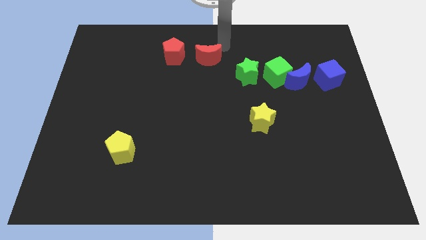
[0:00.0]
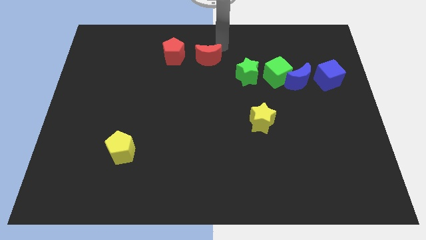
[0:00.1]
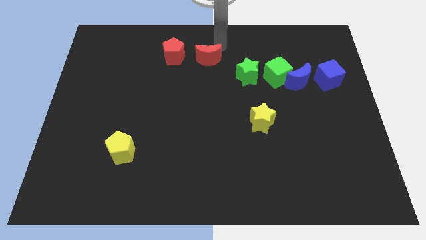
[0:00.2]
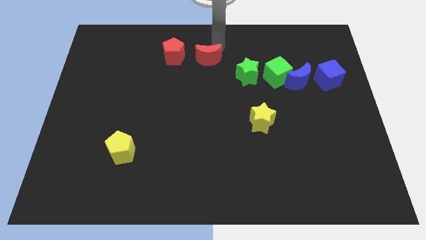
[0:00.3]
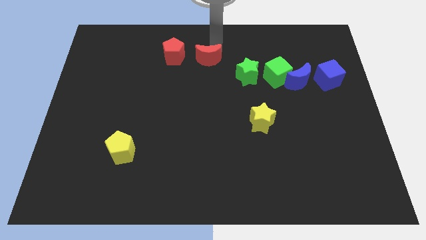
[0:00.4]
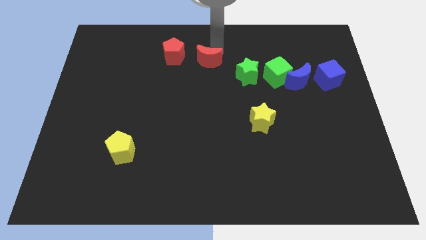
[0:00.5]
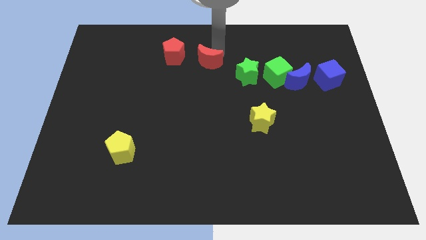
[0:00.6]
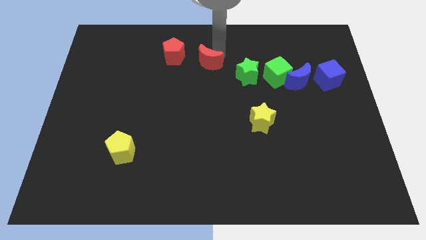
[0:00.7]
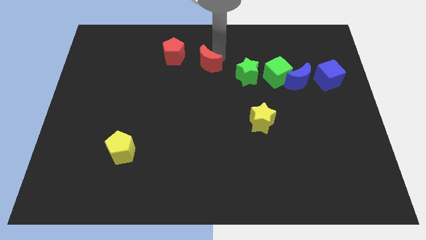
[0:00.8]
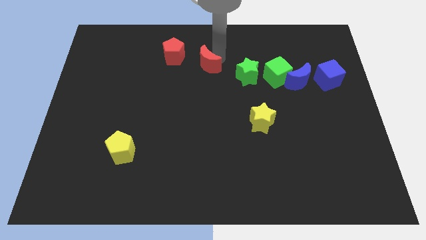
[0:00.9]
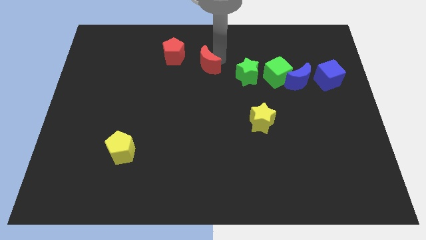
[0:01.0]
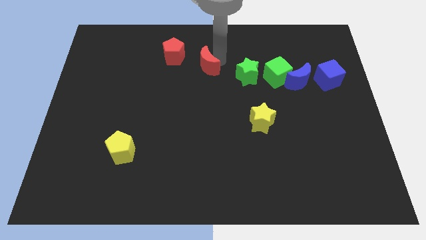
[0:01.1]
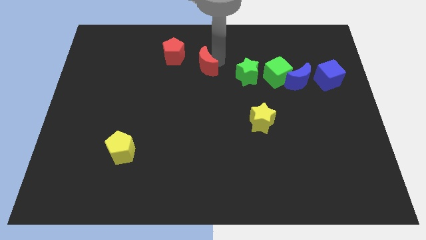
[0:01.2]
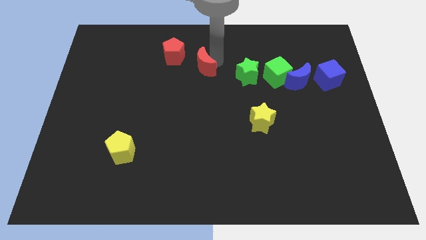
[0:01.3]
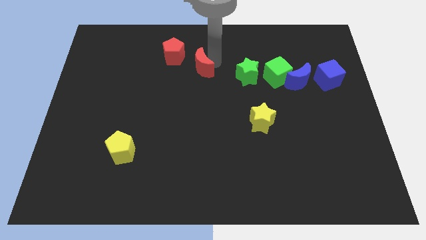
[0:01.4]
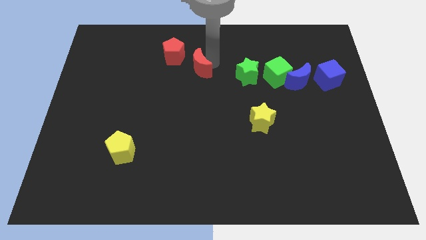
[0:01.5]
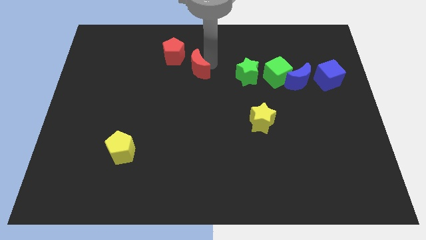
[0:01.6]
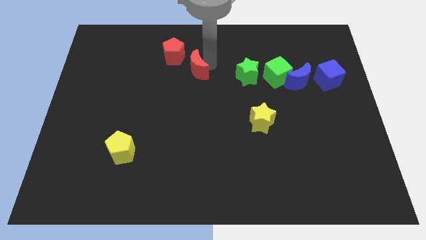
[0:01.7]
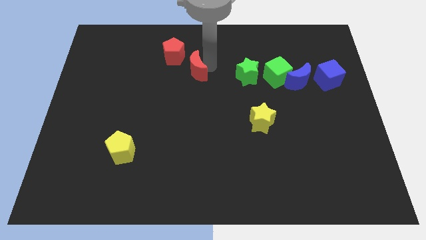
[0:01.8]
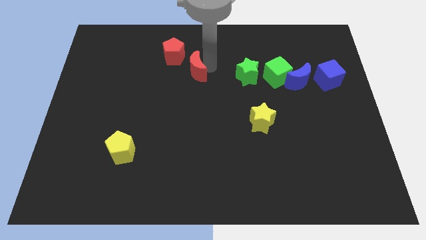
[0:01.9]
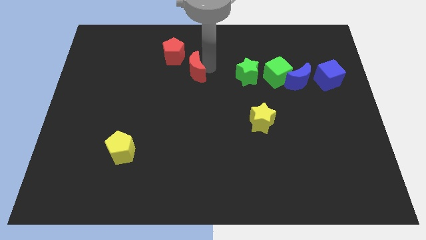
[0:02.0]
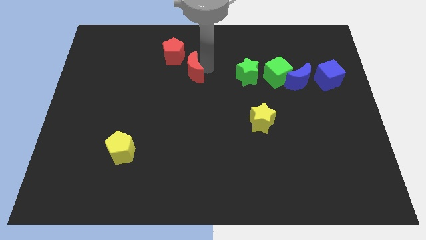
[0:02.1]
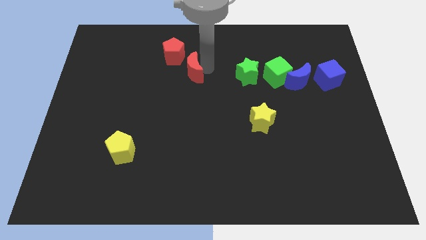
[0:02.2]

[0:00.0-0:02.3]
place the red moon left to the green star

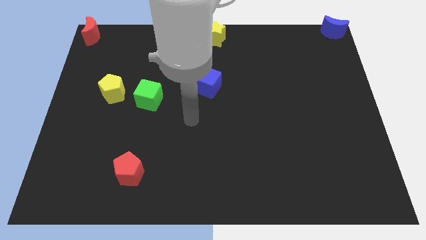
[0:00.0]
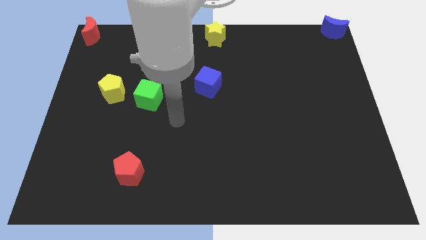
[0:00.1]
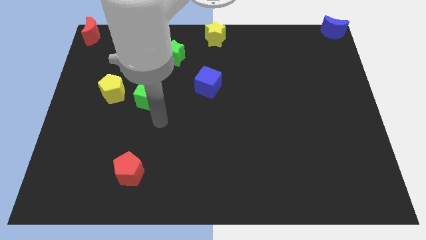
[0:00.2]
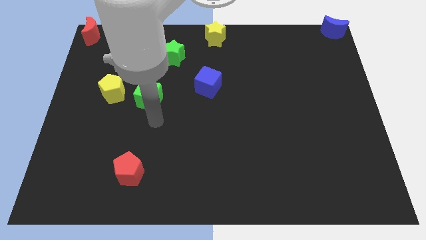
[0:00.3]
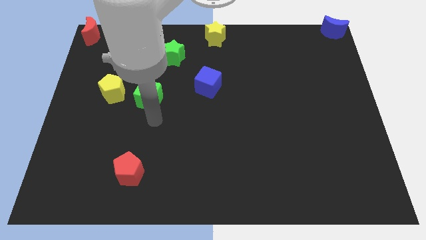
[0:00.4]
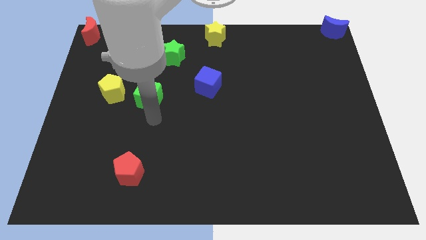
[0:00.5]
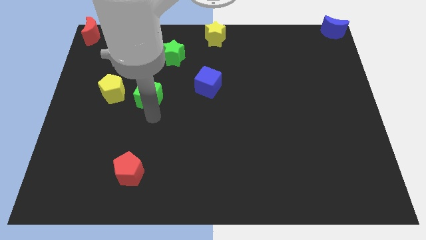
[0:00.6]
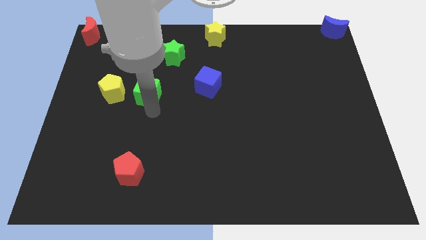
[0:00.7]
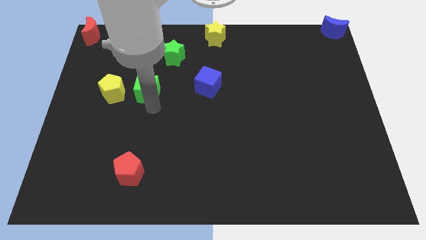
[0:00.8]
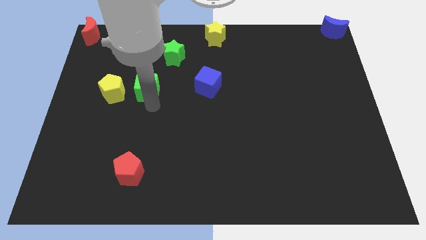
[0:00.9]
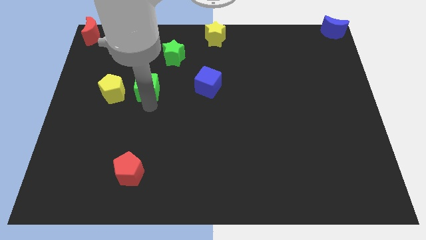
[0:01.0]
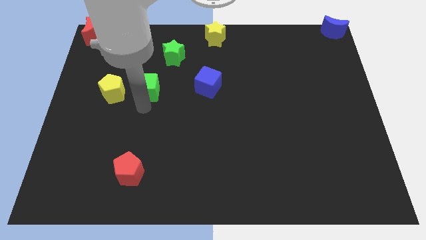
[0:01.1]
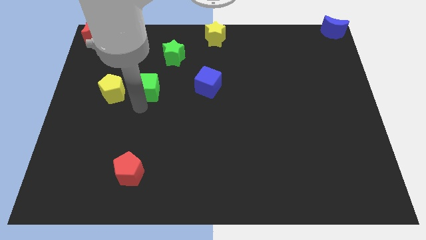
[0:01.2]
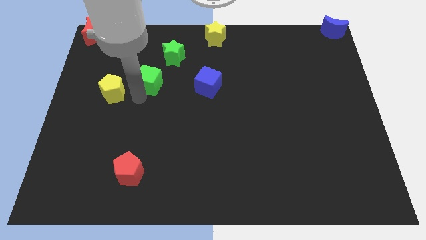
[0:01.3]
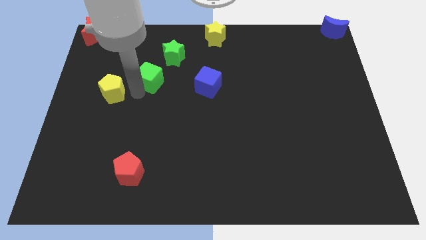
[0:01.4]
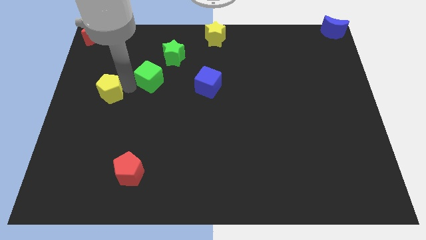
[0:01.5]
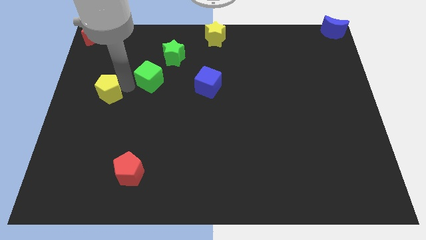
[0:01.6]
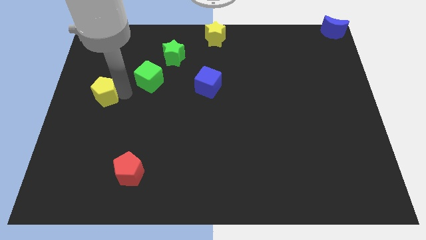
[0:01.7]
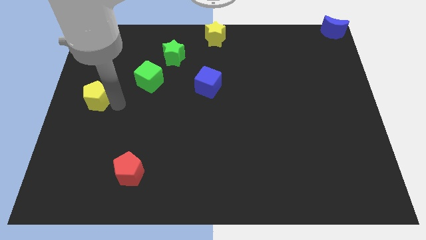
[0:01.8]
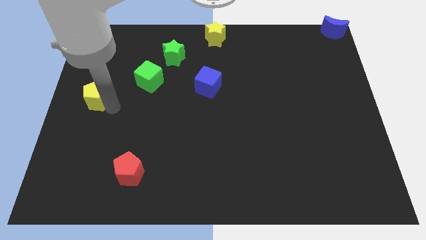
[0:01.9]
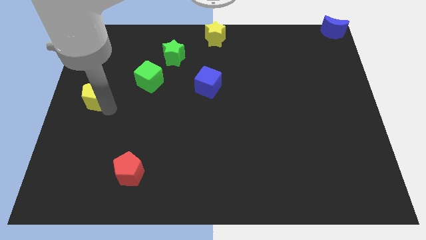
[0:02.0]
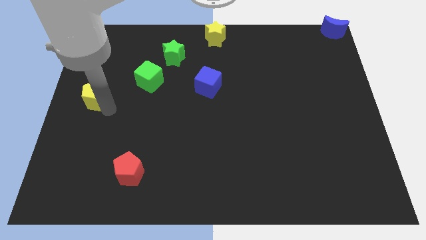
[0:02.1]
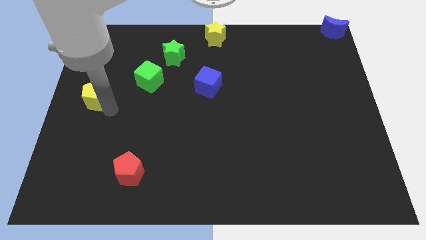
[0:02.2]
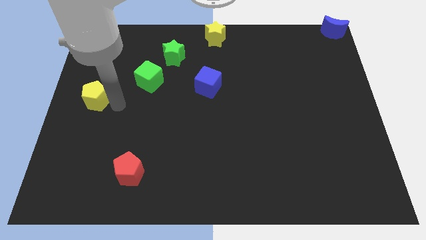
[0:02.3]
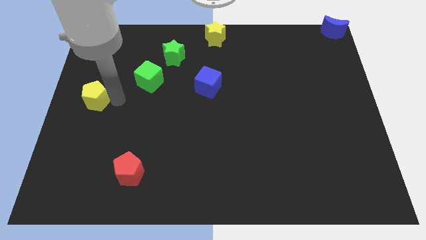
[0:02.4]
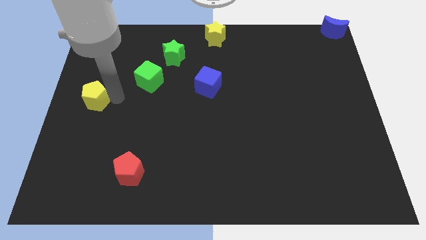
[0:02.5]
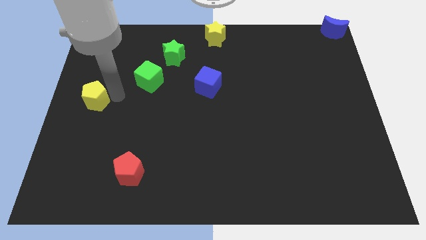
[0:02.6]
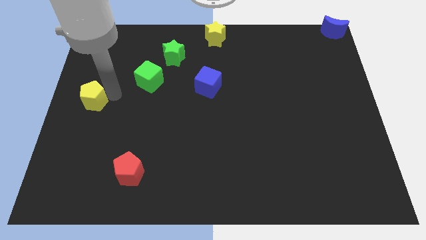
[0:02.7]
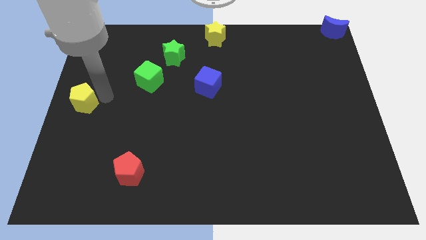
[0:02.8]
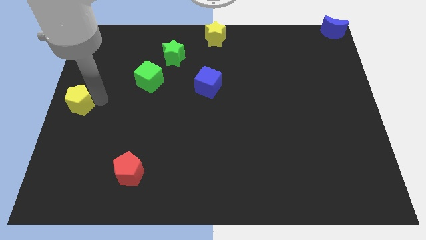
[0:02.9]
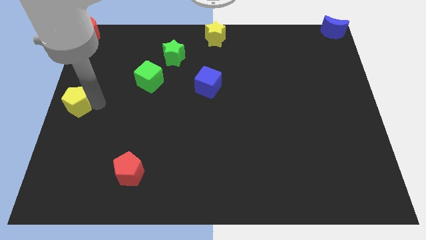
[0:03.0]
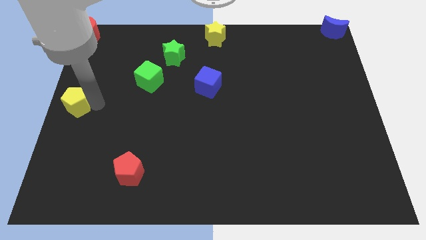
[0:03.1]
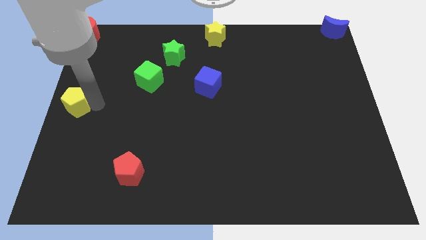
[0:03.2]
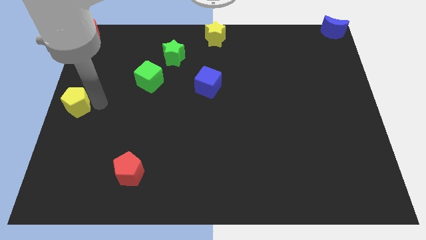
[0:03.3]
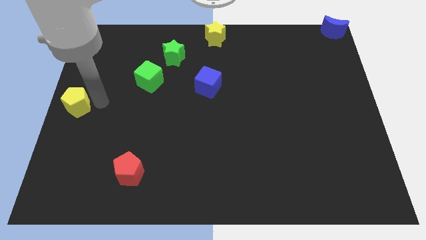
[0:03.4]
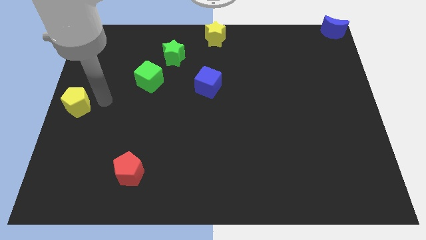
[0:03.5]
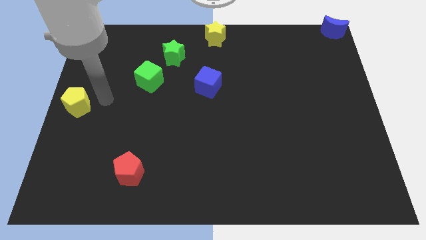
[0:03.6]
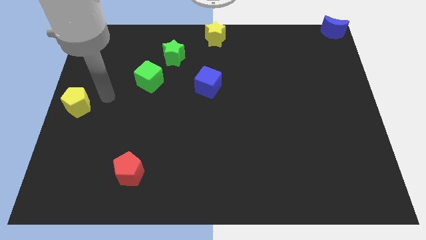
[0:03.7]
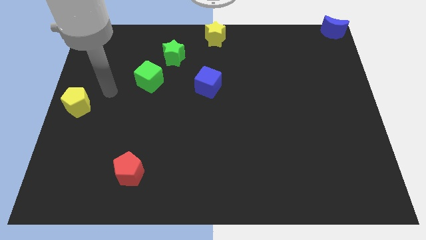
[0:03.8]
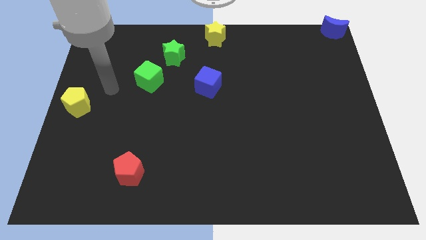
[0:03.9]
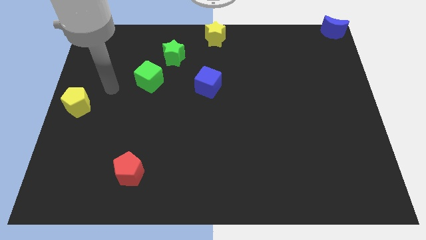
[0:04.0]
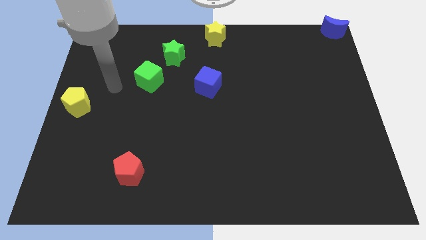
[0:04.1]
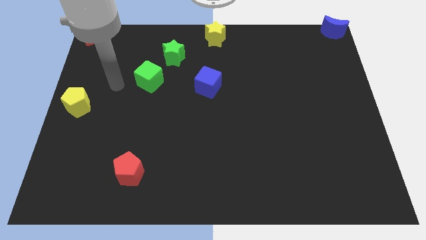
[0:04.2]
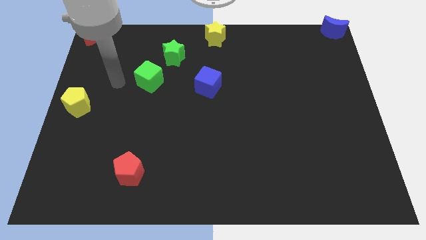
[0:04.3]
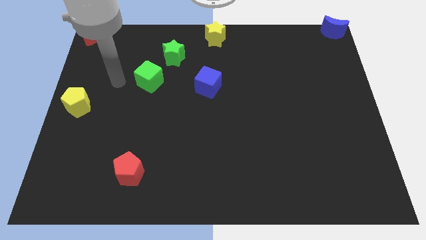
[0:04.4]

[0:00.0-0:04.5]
push the yellow pentagon to the left center of the board

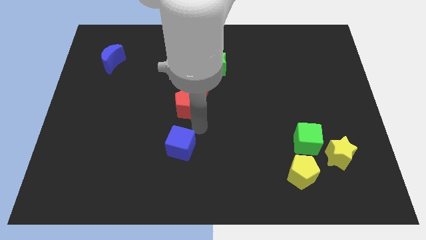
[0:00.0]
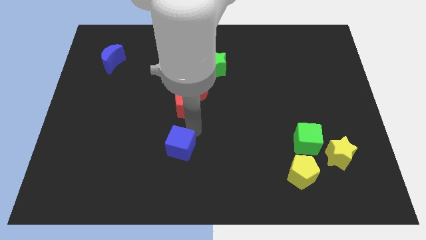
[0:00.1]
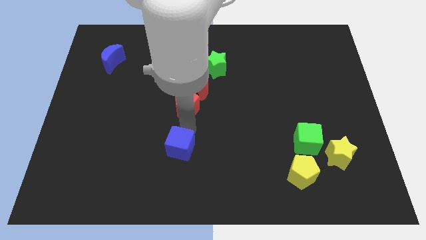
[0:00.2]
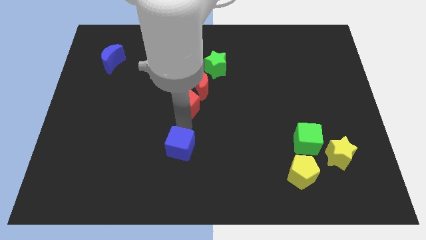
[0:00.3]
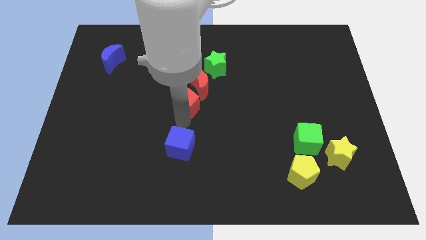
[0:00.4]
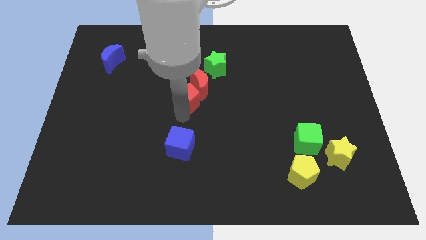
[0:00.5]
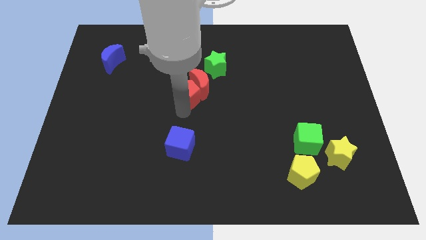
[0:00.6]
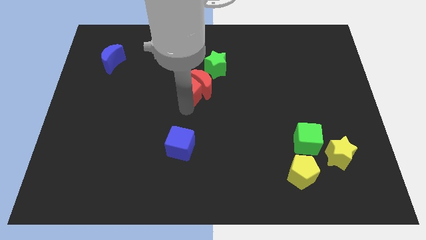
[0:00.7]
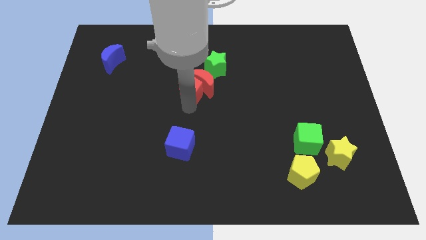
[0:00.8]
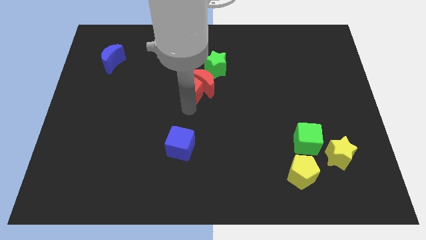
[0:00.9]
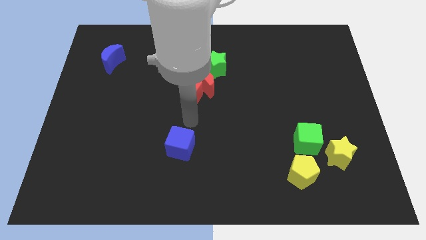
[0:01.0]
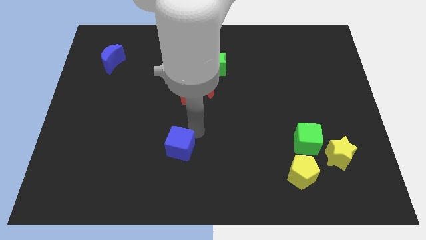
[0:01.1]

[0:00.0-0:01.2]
push the red pentagon into the red moon

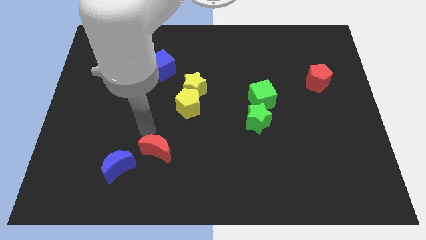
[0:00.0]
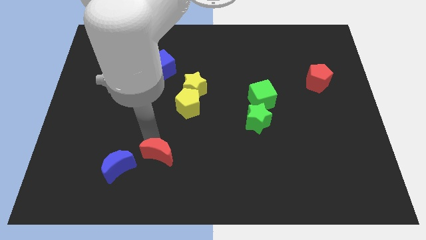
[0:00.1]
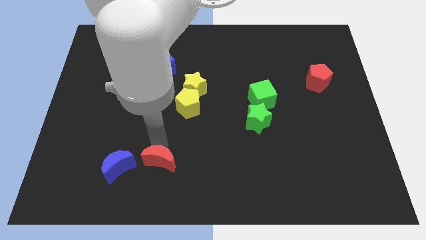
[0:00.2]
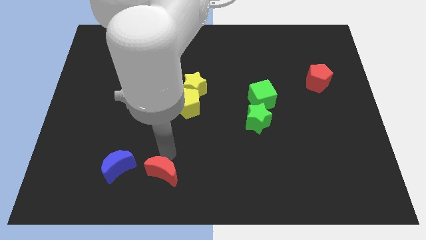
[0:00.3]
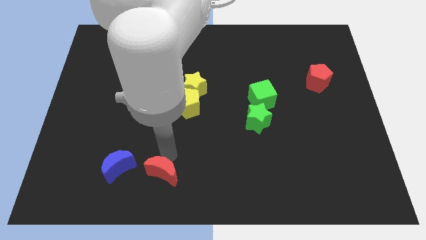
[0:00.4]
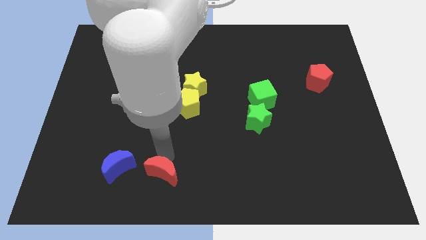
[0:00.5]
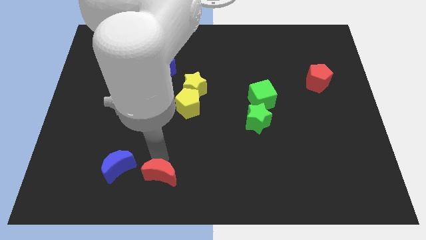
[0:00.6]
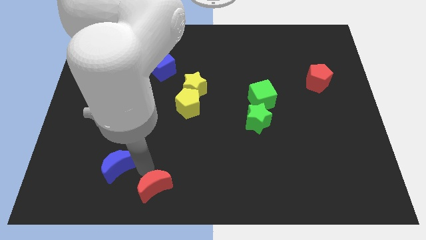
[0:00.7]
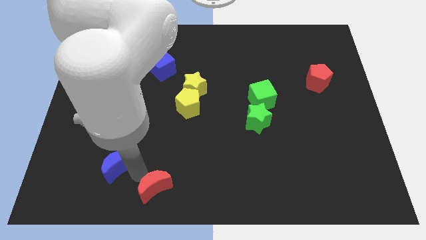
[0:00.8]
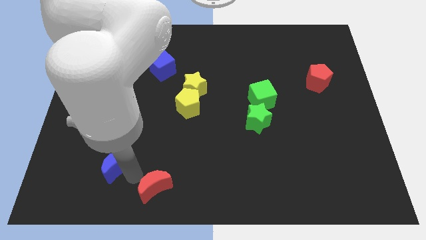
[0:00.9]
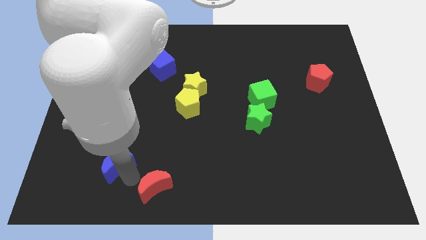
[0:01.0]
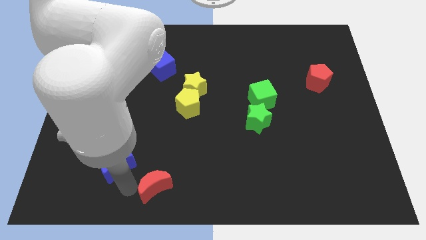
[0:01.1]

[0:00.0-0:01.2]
place the red moon at the bottom right of the blue moon
